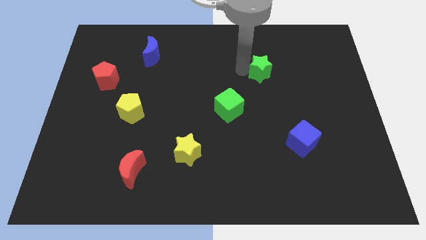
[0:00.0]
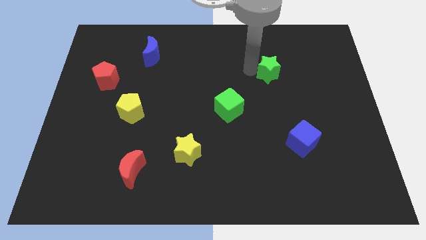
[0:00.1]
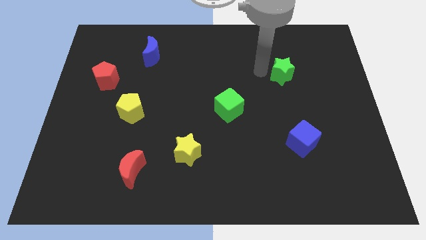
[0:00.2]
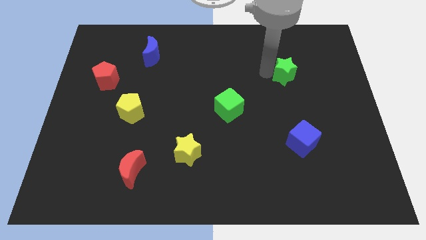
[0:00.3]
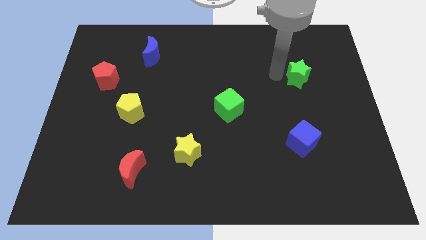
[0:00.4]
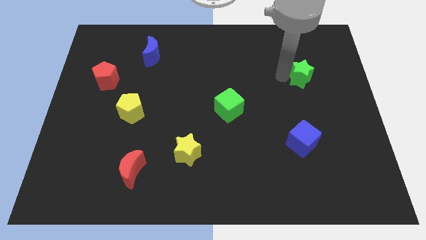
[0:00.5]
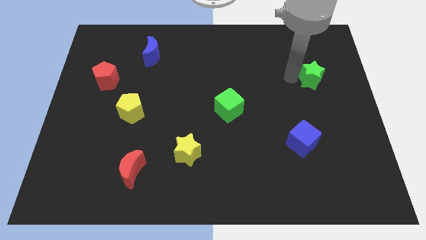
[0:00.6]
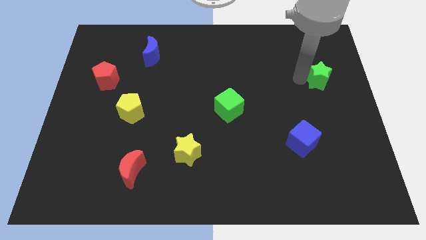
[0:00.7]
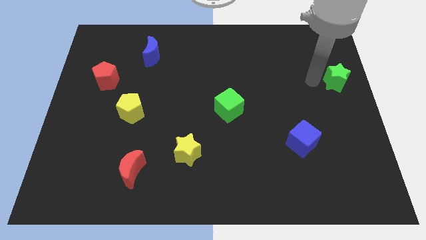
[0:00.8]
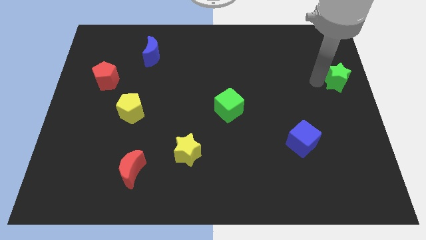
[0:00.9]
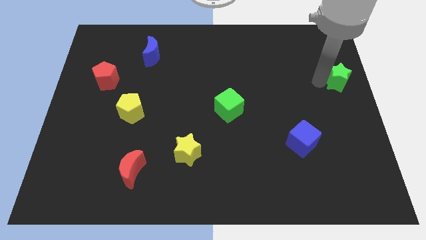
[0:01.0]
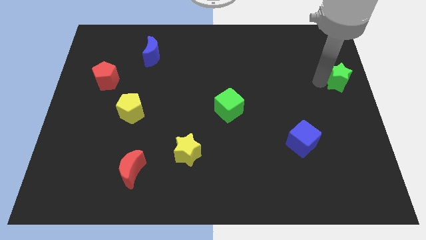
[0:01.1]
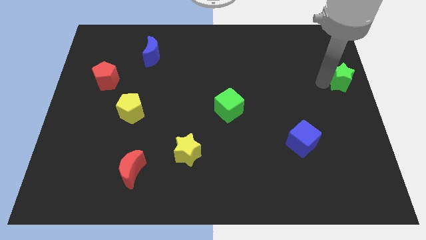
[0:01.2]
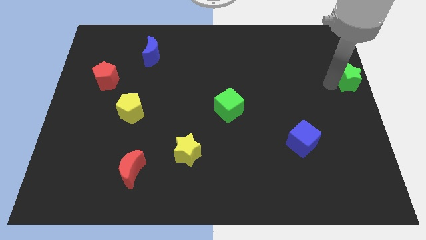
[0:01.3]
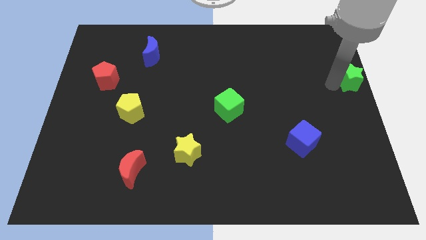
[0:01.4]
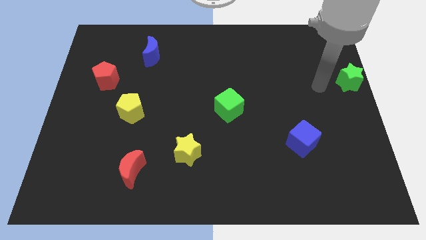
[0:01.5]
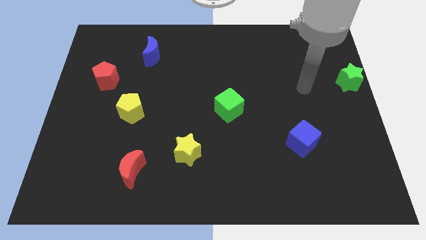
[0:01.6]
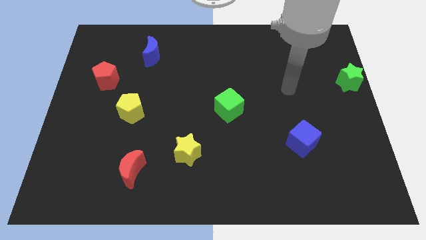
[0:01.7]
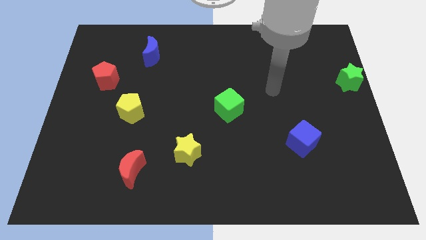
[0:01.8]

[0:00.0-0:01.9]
move the green star to the centre right on the board

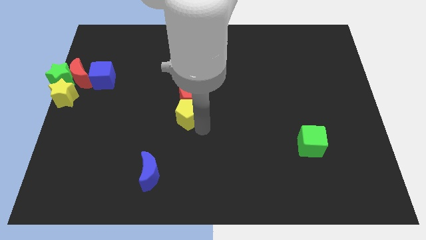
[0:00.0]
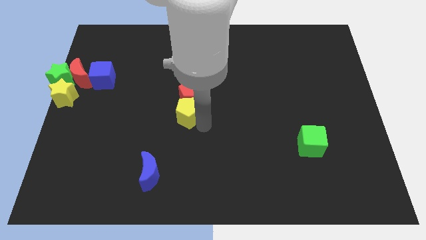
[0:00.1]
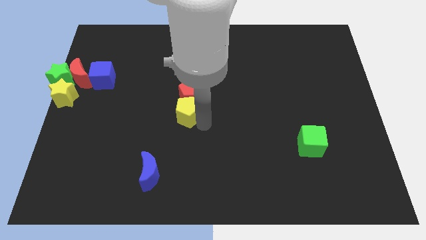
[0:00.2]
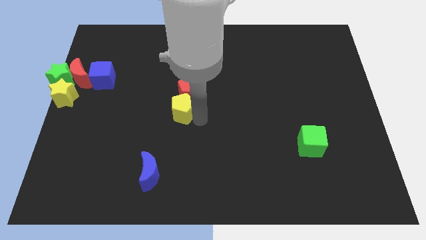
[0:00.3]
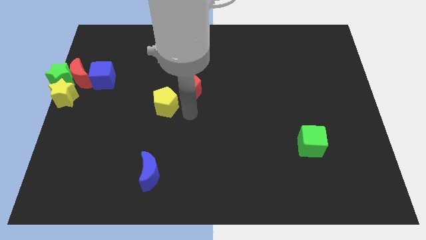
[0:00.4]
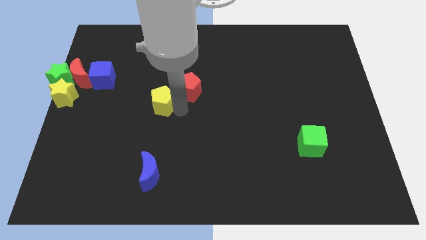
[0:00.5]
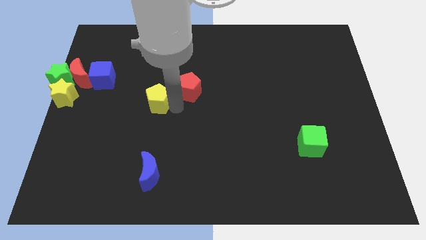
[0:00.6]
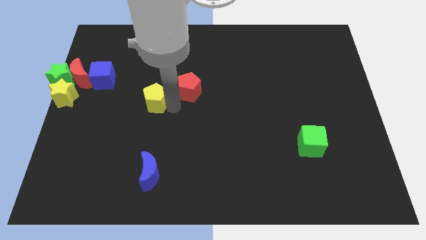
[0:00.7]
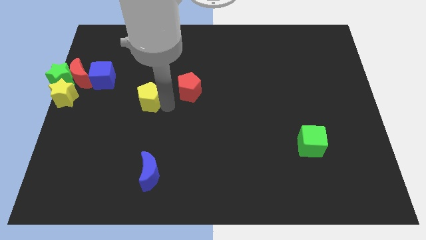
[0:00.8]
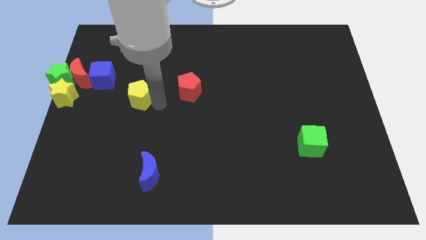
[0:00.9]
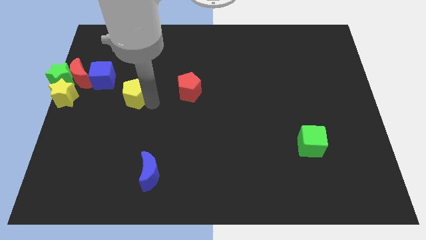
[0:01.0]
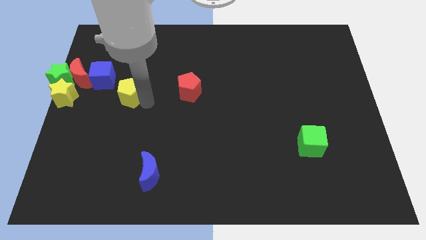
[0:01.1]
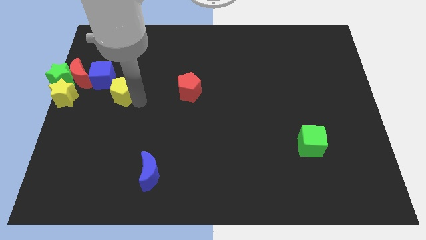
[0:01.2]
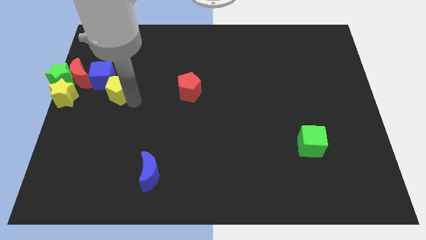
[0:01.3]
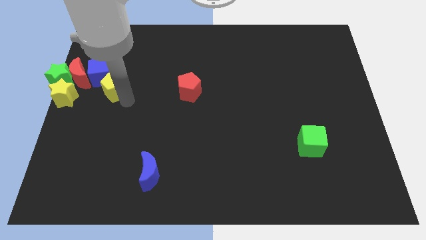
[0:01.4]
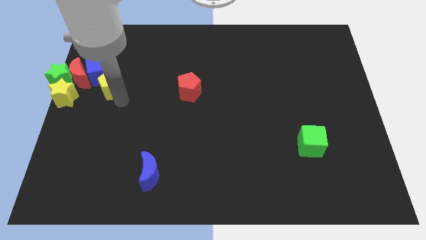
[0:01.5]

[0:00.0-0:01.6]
slide the yellow pentagon into the blue cube

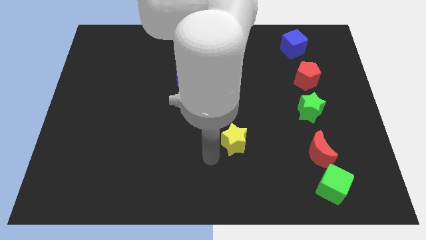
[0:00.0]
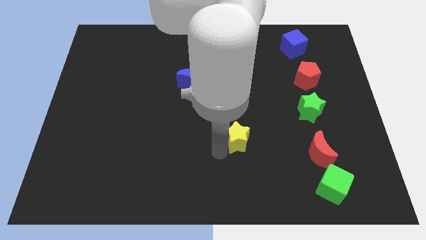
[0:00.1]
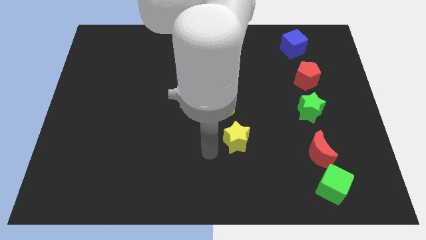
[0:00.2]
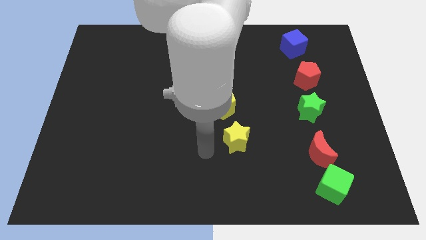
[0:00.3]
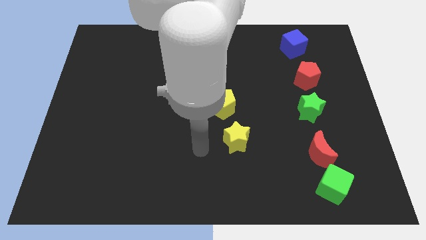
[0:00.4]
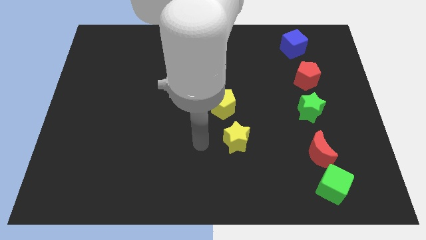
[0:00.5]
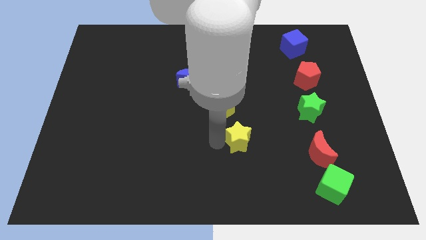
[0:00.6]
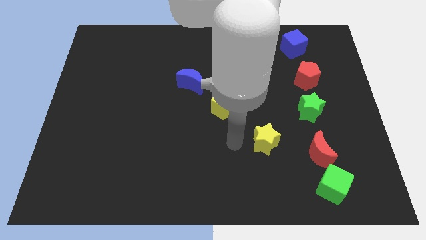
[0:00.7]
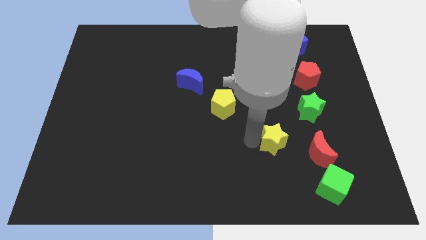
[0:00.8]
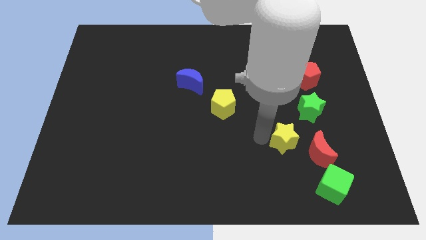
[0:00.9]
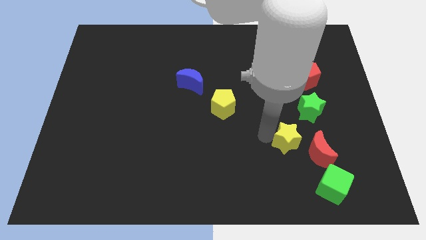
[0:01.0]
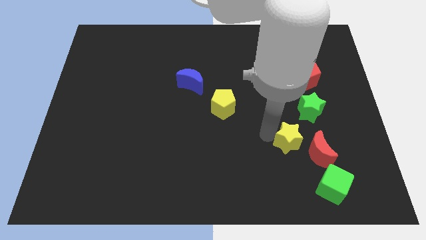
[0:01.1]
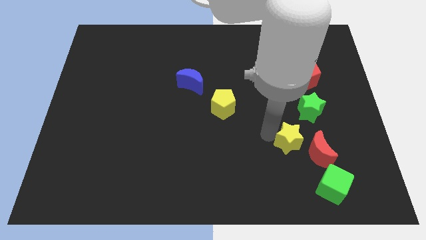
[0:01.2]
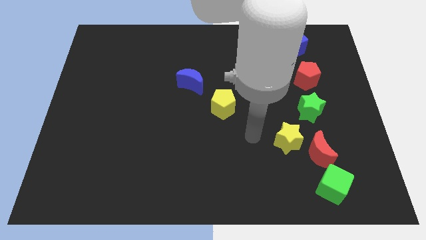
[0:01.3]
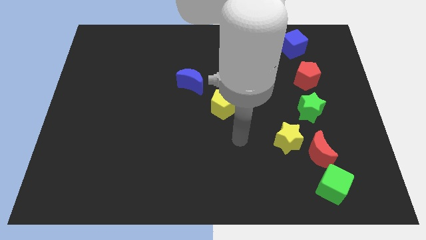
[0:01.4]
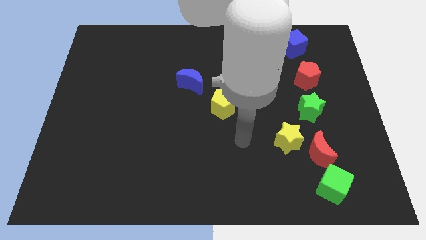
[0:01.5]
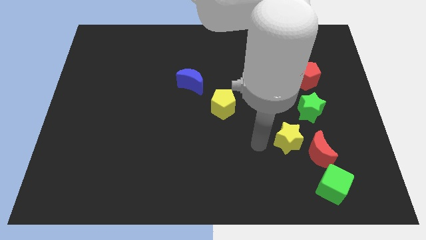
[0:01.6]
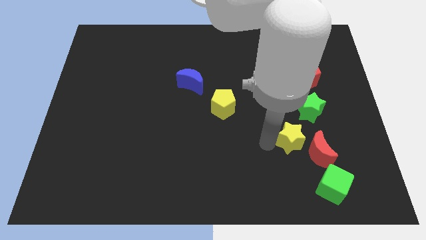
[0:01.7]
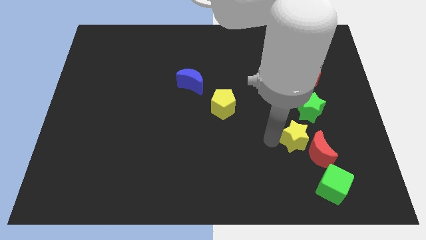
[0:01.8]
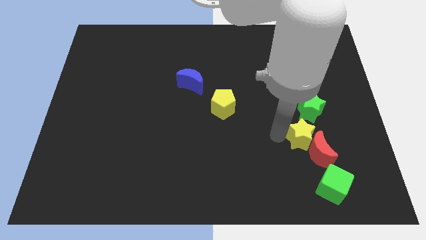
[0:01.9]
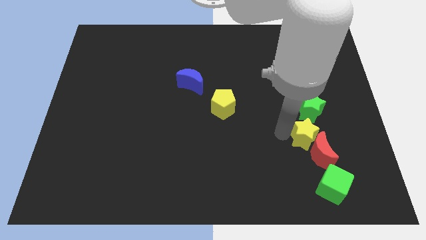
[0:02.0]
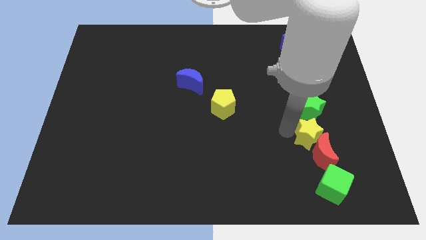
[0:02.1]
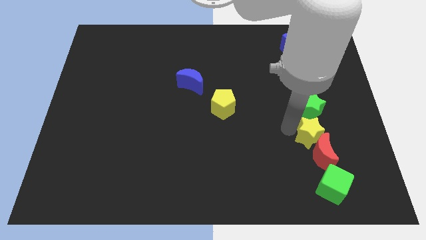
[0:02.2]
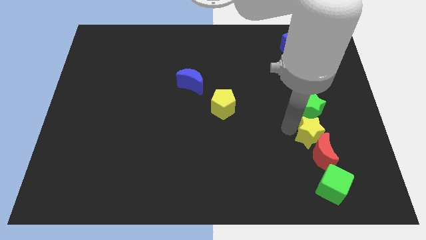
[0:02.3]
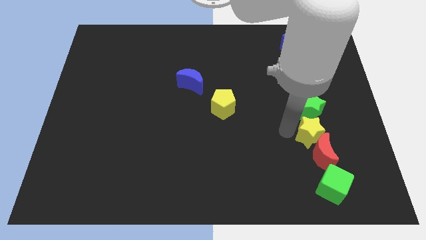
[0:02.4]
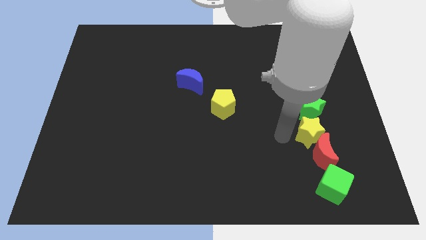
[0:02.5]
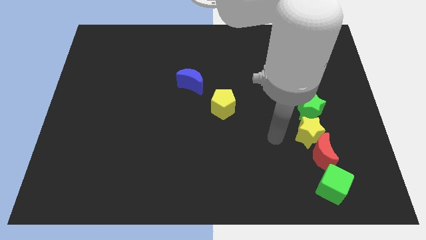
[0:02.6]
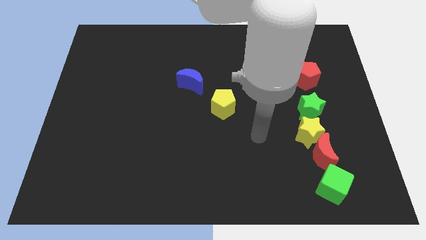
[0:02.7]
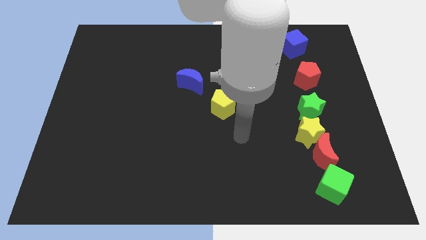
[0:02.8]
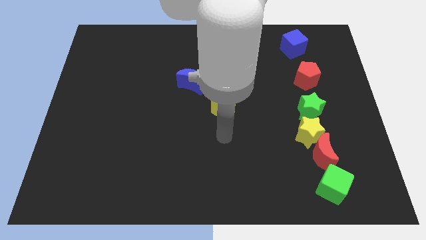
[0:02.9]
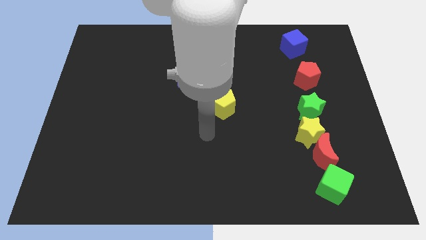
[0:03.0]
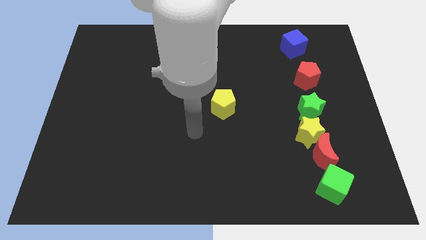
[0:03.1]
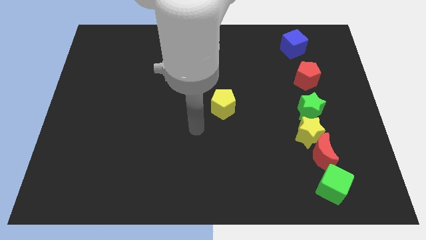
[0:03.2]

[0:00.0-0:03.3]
place the yellow star on top of red crescent

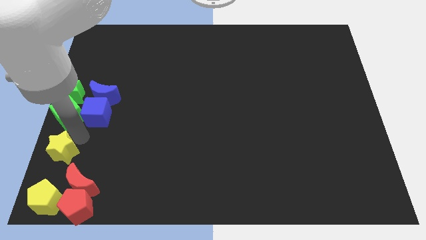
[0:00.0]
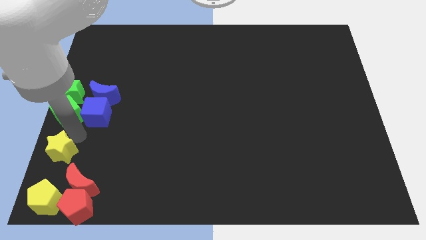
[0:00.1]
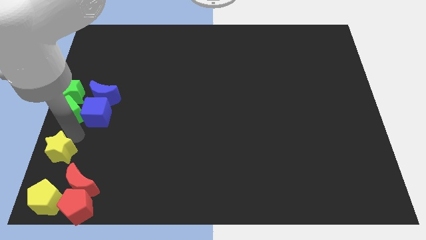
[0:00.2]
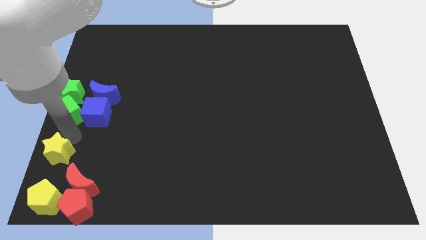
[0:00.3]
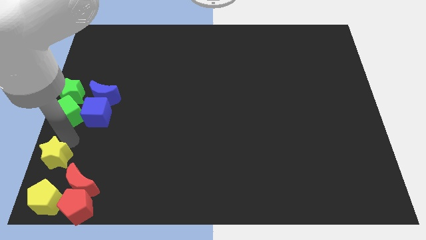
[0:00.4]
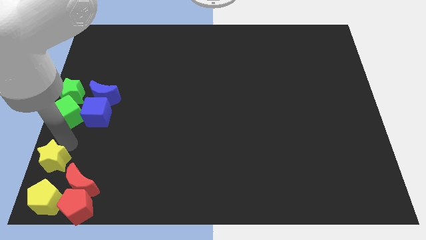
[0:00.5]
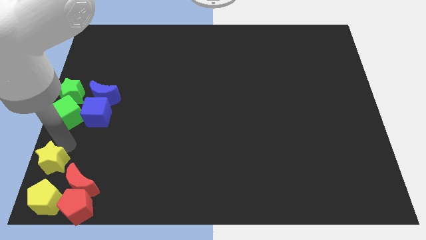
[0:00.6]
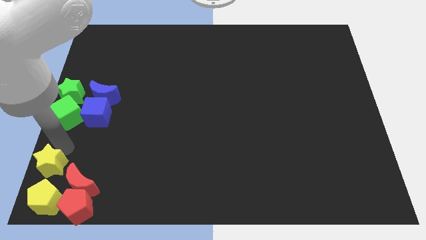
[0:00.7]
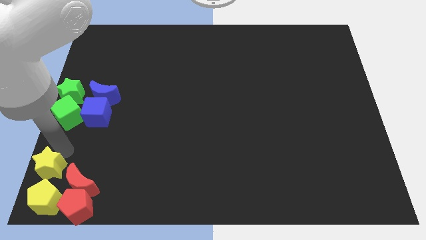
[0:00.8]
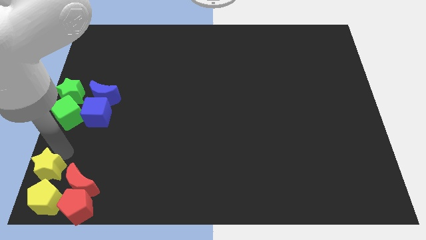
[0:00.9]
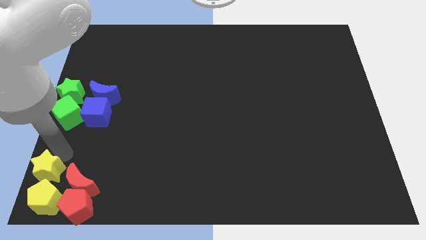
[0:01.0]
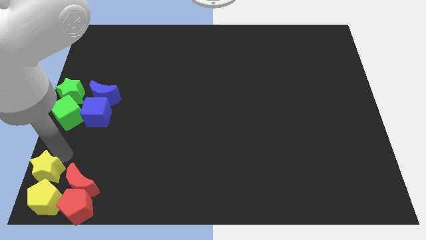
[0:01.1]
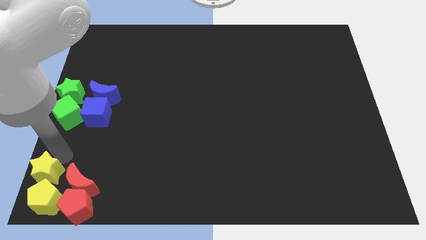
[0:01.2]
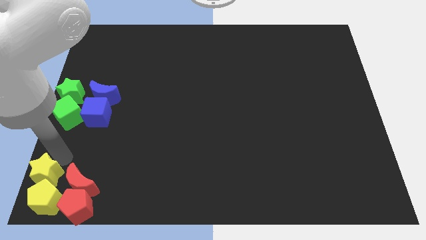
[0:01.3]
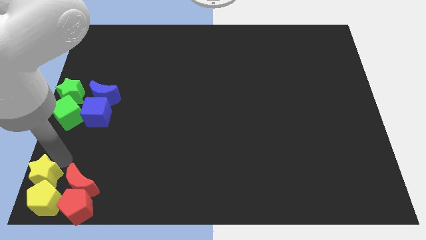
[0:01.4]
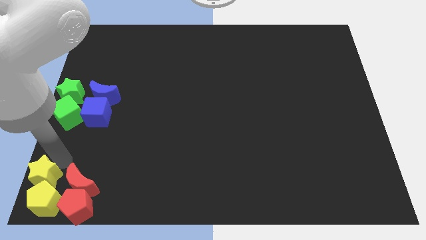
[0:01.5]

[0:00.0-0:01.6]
move yellow star towards the yellow pentagon

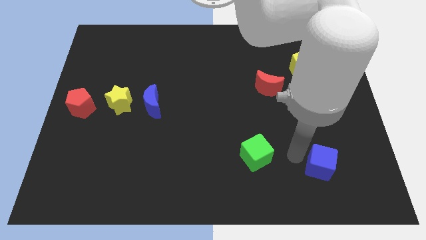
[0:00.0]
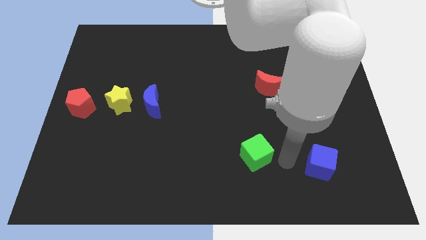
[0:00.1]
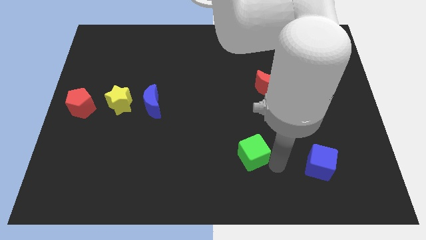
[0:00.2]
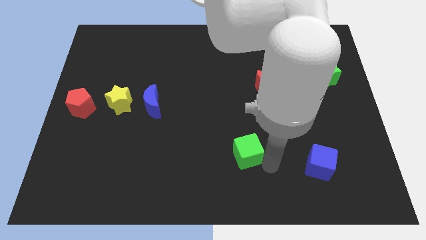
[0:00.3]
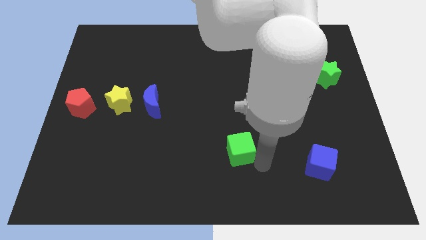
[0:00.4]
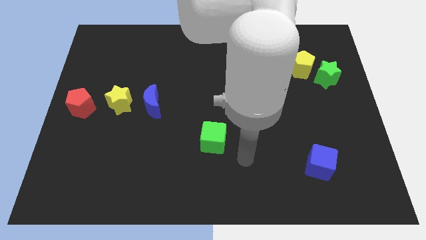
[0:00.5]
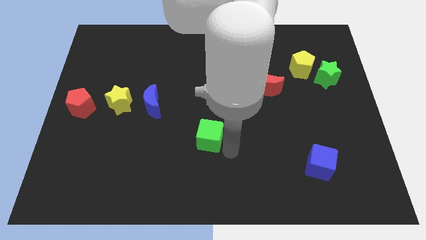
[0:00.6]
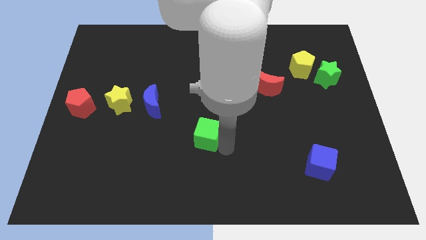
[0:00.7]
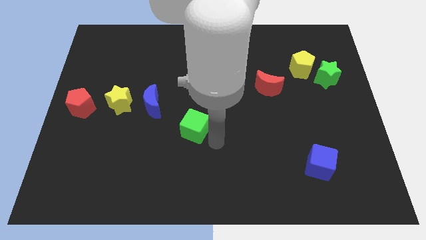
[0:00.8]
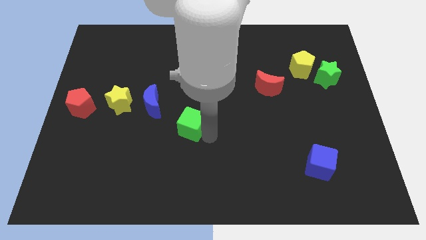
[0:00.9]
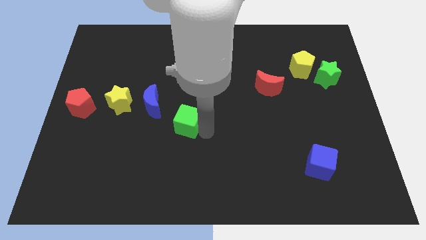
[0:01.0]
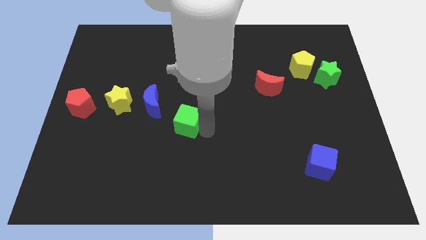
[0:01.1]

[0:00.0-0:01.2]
move the green cube away from the blue cube
